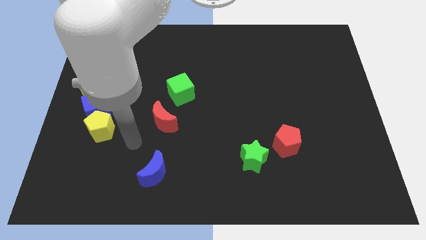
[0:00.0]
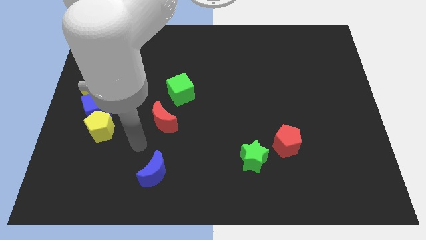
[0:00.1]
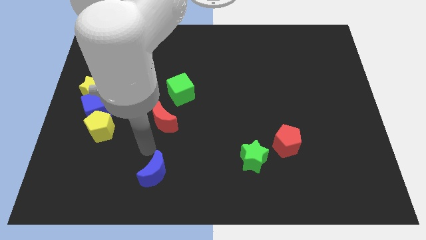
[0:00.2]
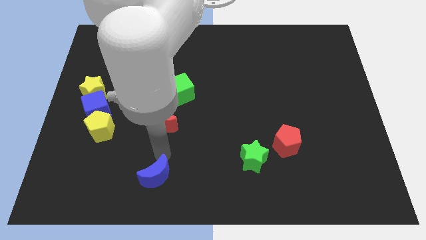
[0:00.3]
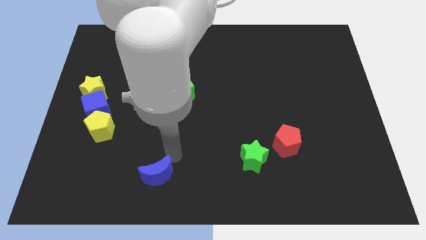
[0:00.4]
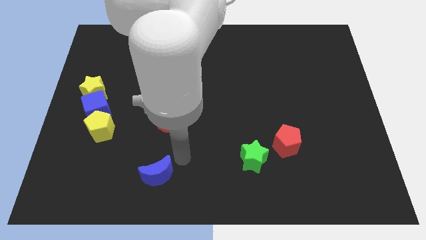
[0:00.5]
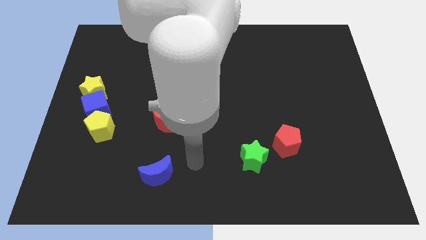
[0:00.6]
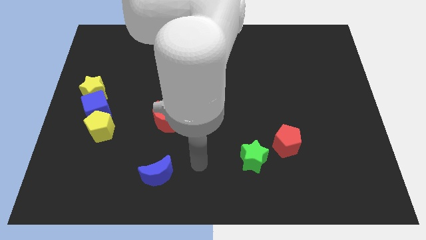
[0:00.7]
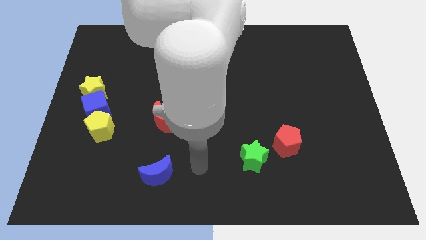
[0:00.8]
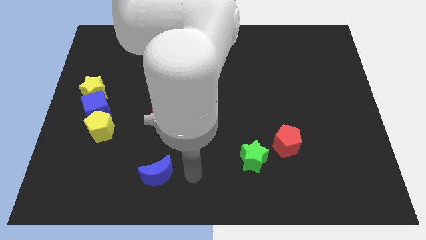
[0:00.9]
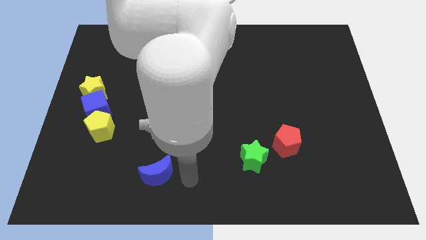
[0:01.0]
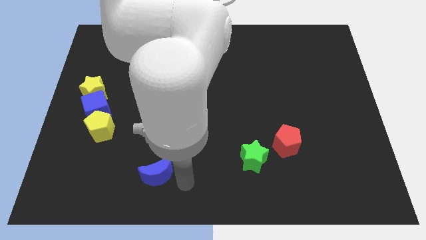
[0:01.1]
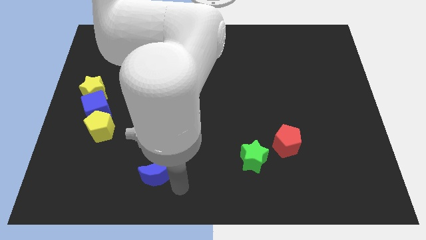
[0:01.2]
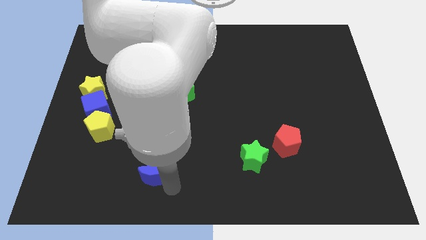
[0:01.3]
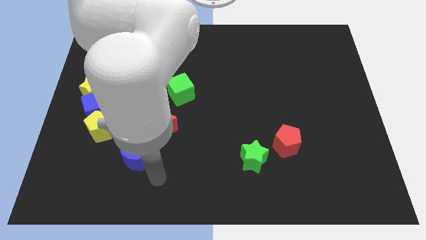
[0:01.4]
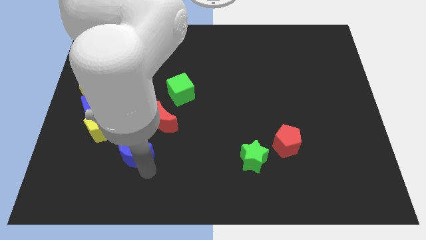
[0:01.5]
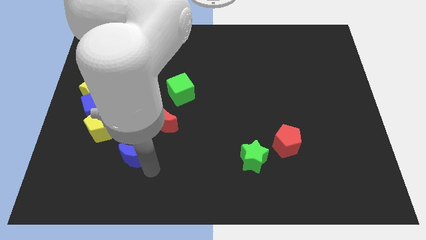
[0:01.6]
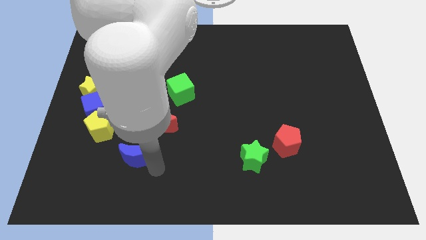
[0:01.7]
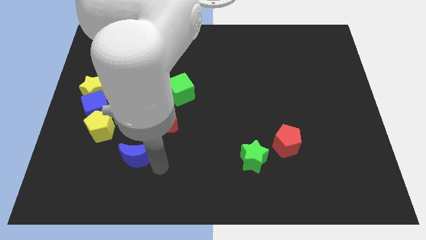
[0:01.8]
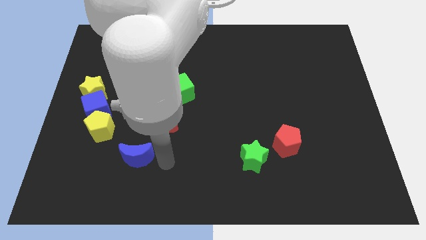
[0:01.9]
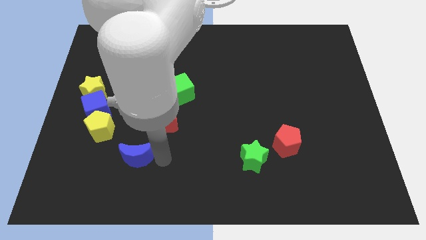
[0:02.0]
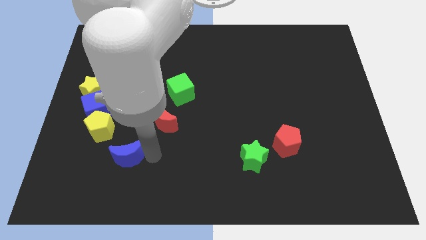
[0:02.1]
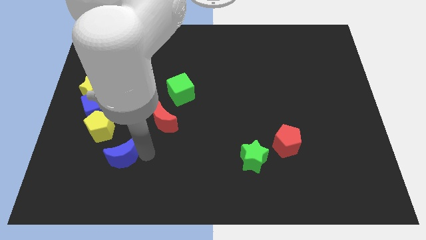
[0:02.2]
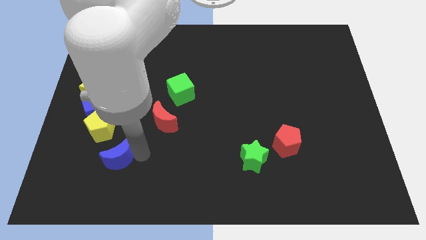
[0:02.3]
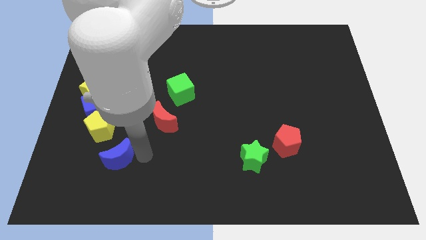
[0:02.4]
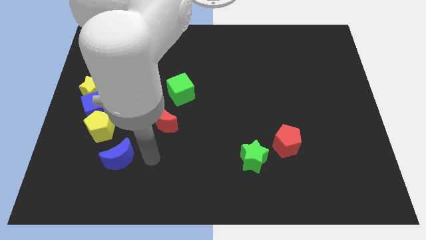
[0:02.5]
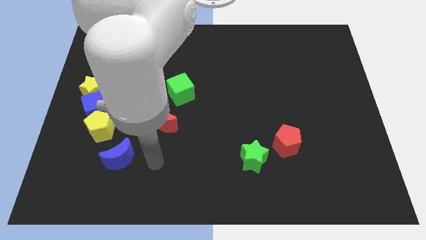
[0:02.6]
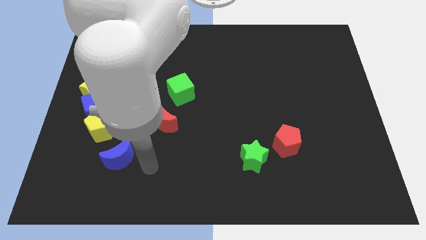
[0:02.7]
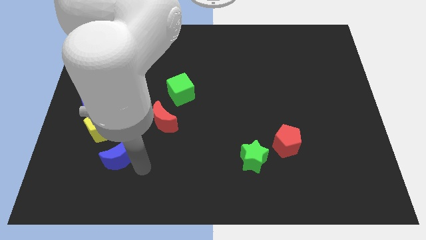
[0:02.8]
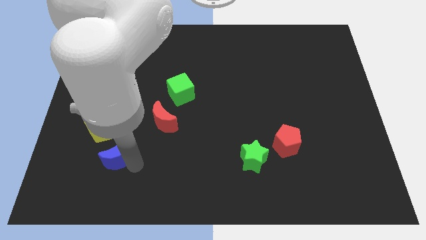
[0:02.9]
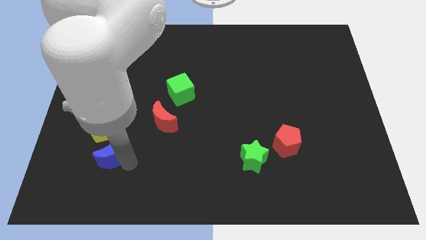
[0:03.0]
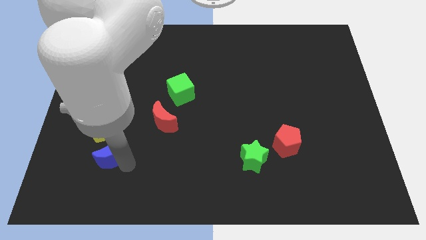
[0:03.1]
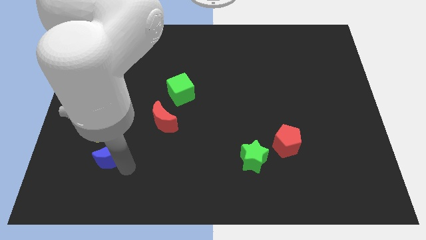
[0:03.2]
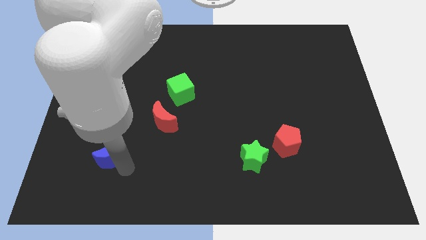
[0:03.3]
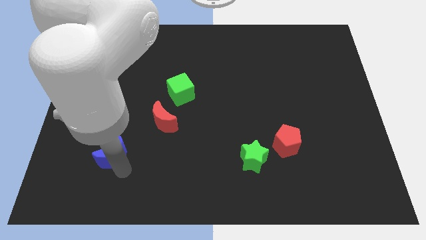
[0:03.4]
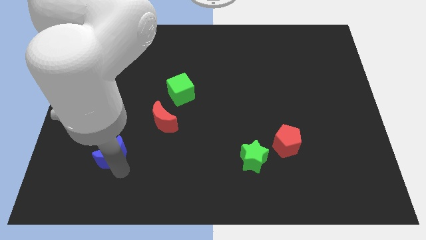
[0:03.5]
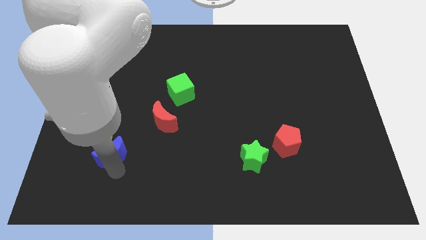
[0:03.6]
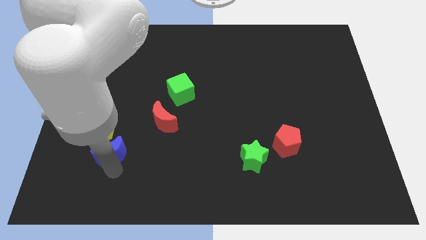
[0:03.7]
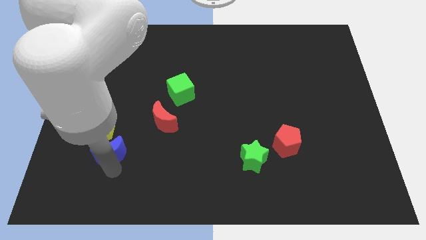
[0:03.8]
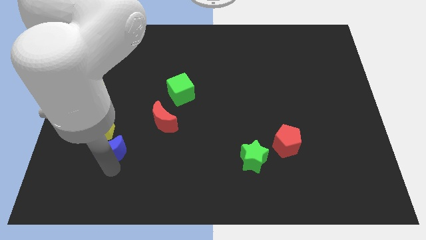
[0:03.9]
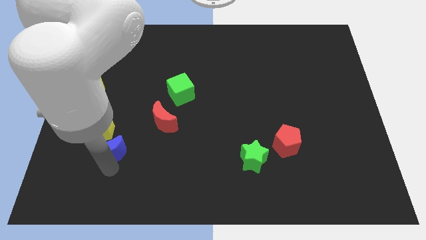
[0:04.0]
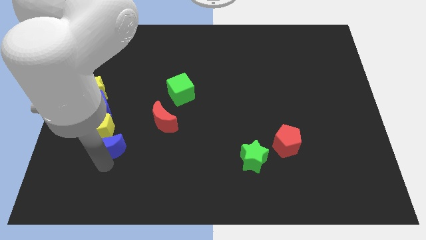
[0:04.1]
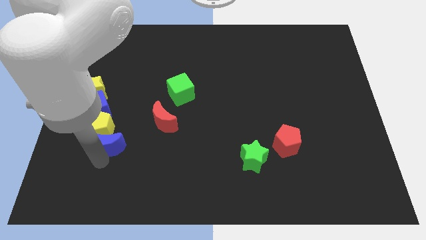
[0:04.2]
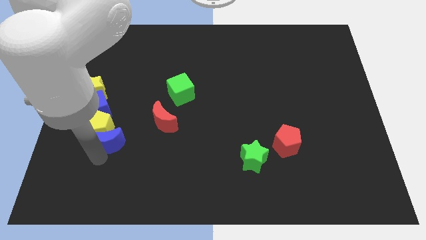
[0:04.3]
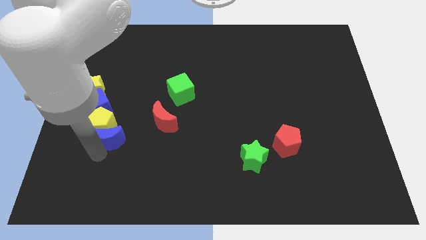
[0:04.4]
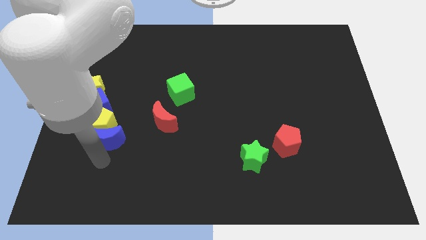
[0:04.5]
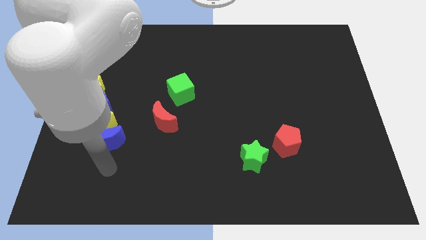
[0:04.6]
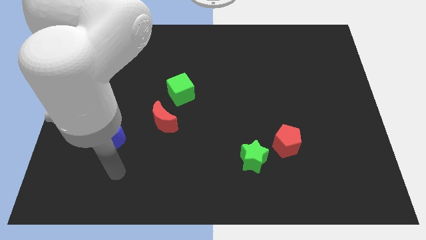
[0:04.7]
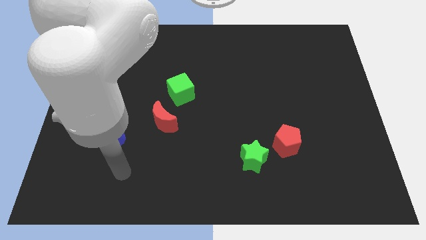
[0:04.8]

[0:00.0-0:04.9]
push the blue crescent into the yellow pentagon

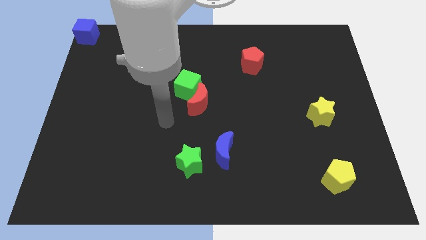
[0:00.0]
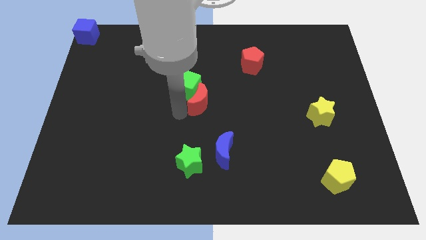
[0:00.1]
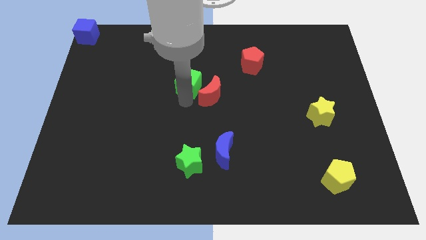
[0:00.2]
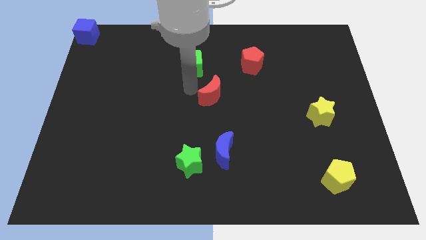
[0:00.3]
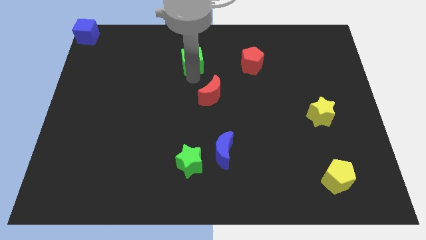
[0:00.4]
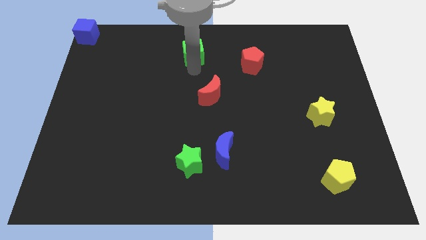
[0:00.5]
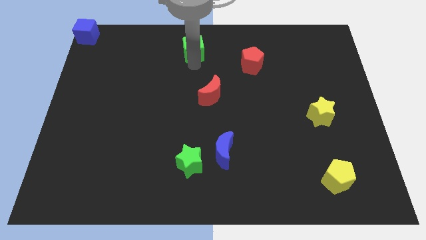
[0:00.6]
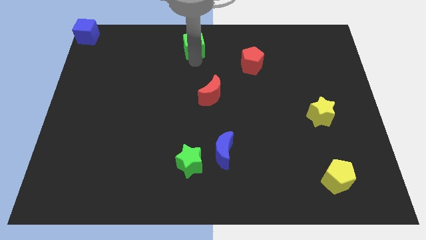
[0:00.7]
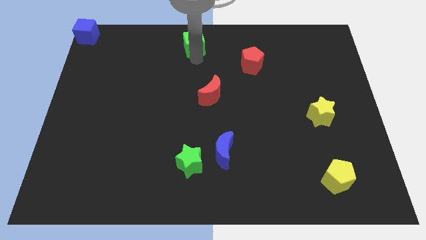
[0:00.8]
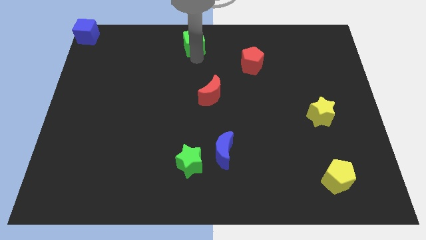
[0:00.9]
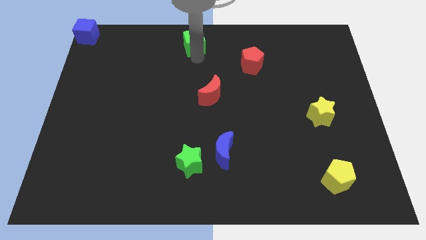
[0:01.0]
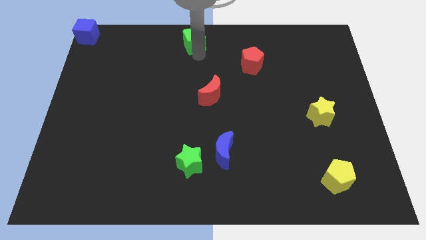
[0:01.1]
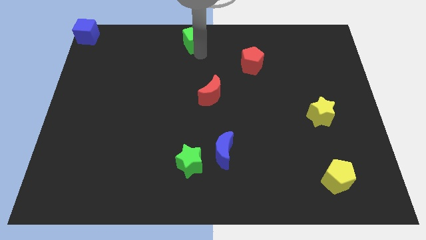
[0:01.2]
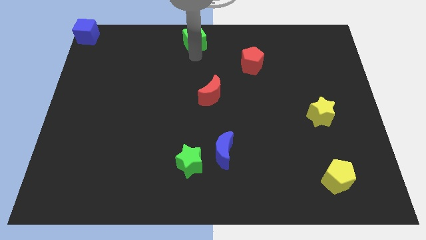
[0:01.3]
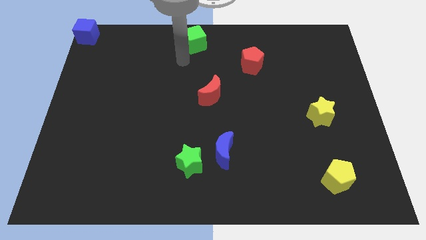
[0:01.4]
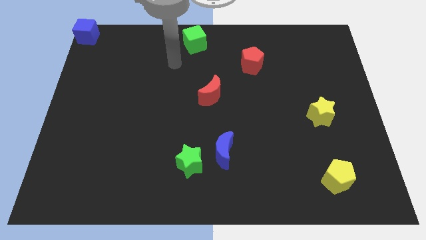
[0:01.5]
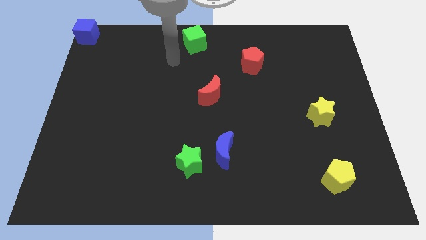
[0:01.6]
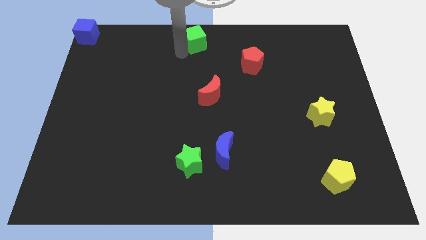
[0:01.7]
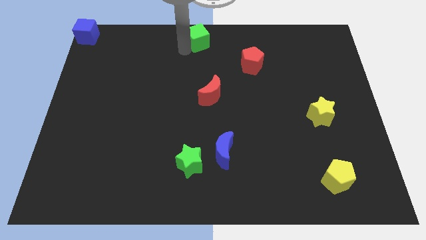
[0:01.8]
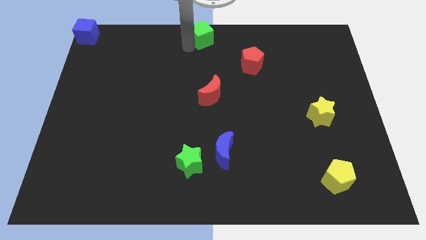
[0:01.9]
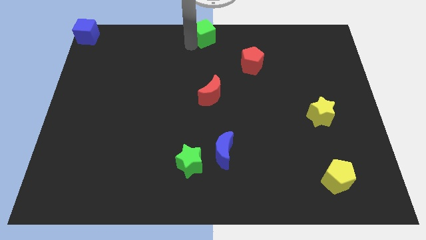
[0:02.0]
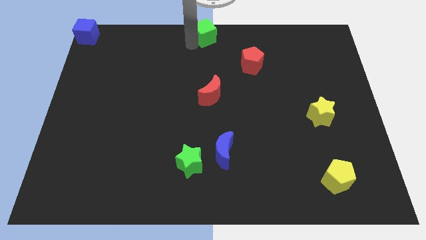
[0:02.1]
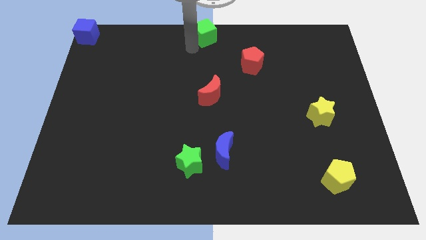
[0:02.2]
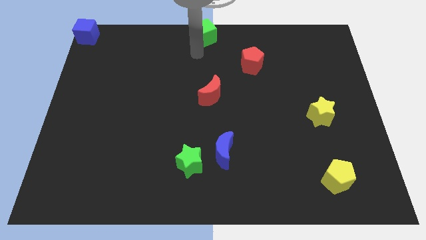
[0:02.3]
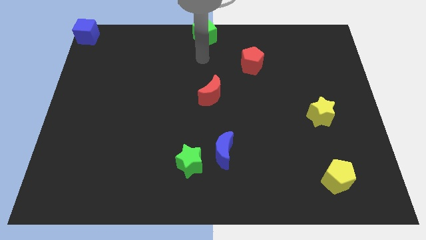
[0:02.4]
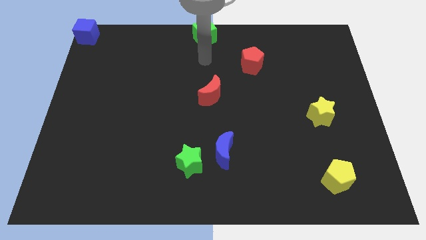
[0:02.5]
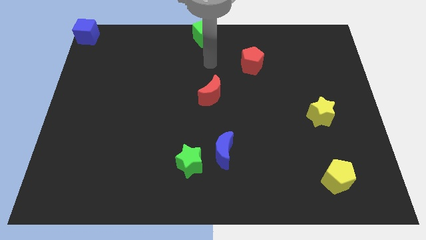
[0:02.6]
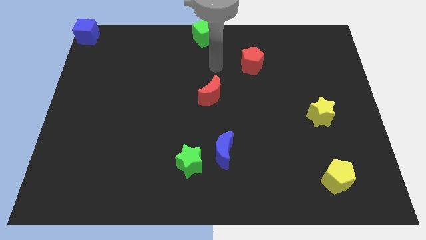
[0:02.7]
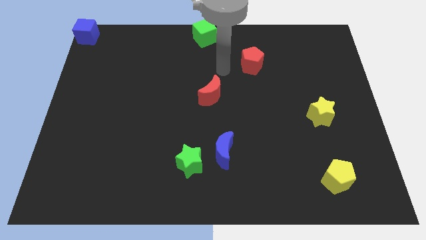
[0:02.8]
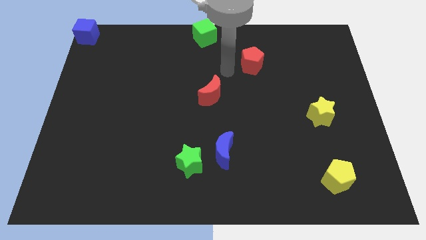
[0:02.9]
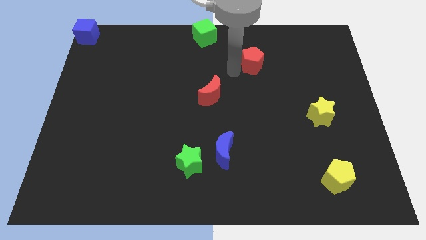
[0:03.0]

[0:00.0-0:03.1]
move the green cube to the top center of the board

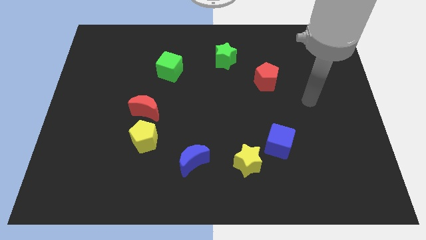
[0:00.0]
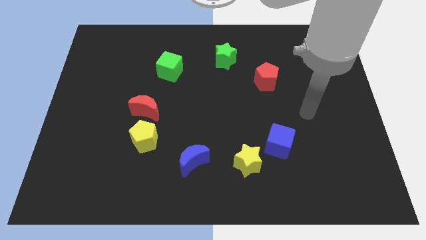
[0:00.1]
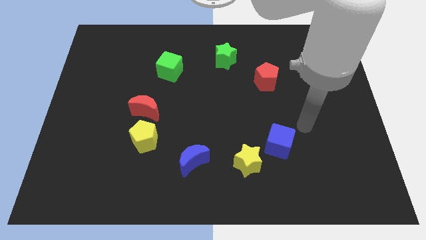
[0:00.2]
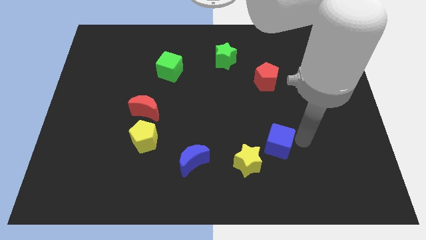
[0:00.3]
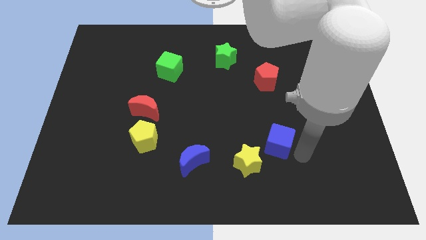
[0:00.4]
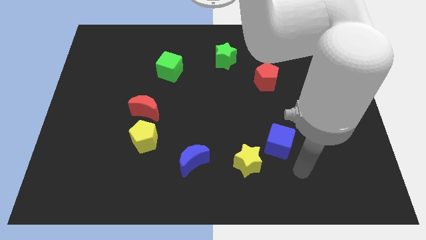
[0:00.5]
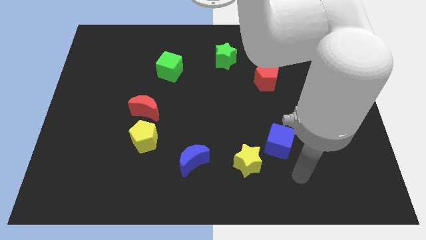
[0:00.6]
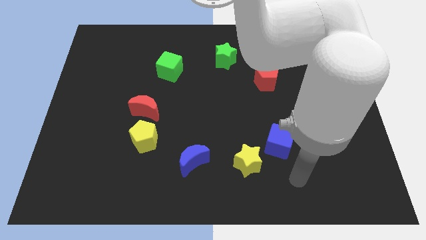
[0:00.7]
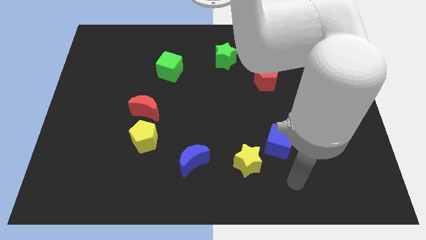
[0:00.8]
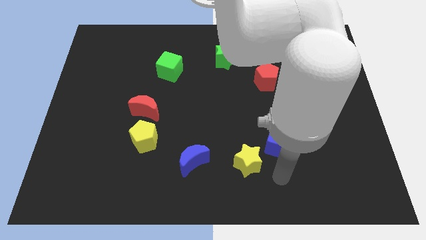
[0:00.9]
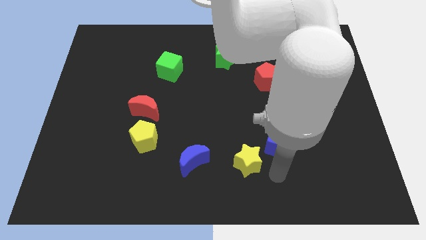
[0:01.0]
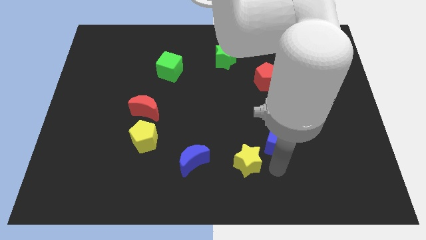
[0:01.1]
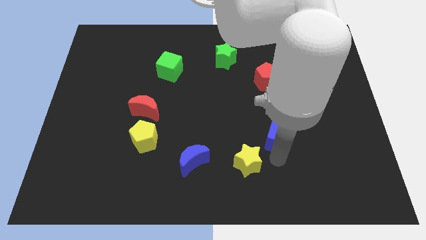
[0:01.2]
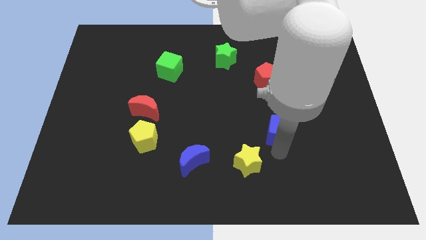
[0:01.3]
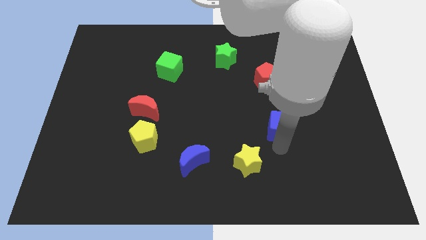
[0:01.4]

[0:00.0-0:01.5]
place the blue cube into the circle in between the red pentagon and yellow star
